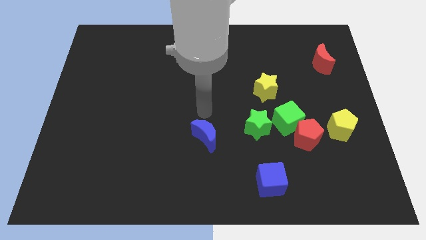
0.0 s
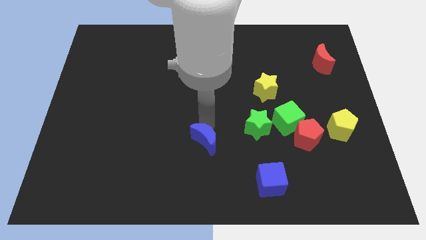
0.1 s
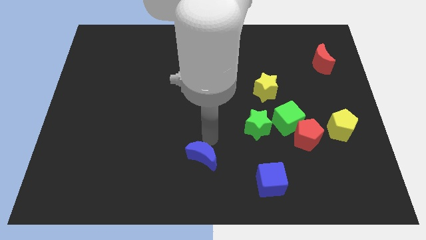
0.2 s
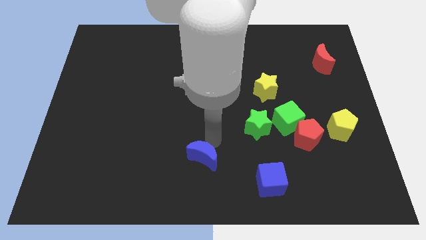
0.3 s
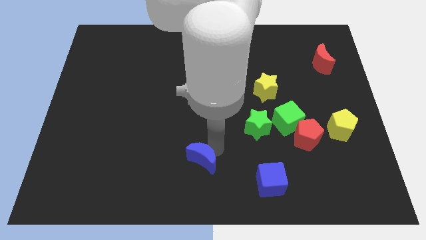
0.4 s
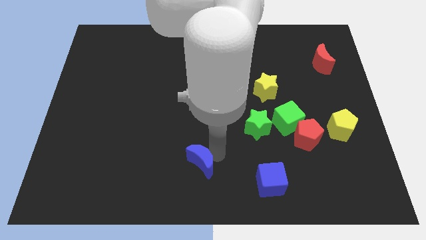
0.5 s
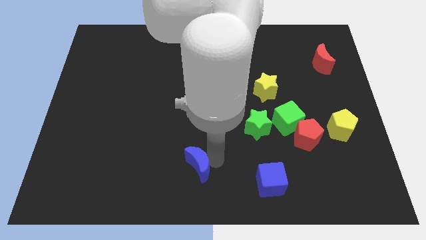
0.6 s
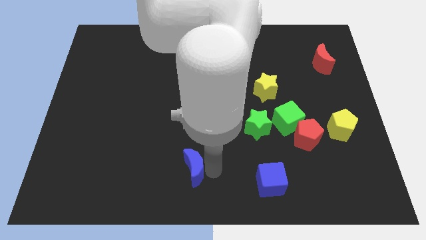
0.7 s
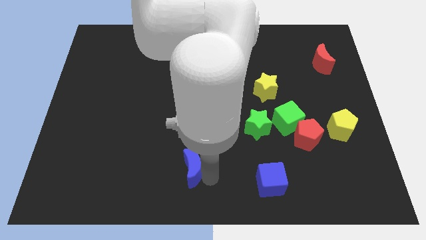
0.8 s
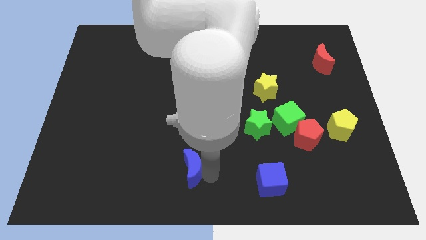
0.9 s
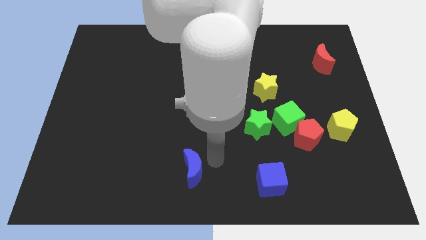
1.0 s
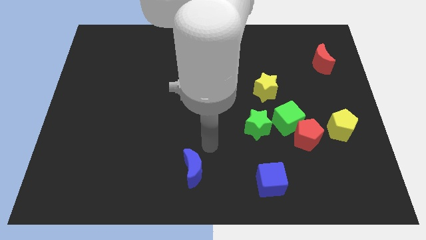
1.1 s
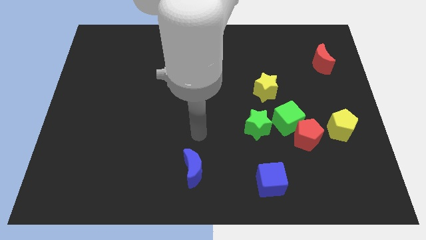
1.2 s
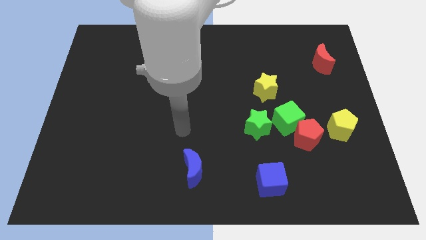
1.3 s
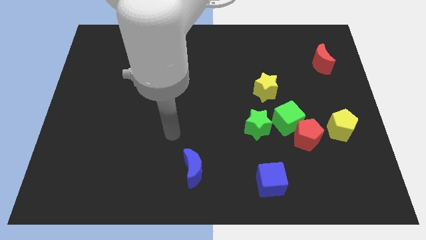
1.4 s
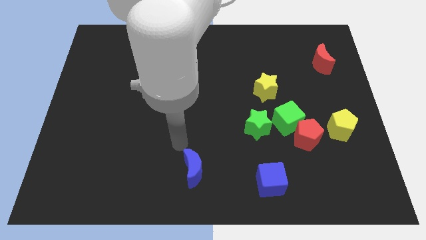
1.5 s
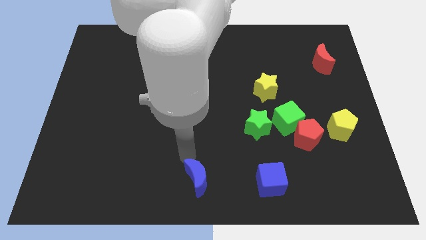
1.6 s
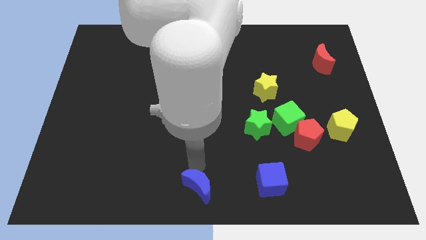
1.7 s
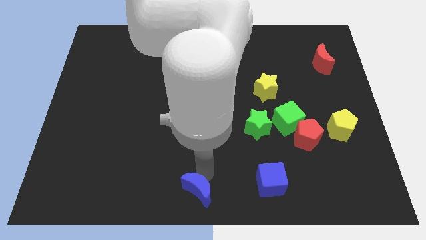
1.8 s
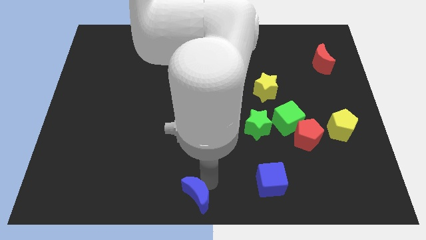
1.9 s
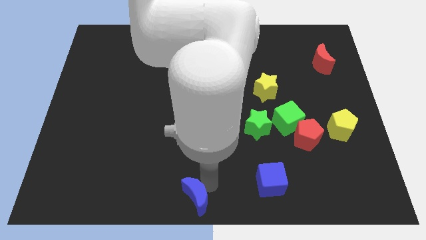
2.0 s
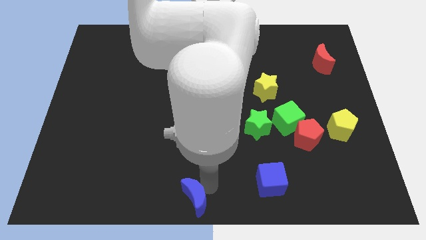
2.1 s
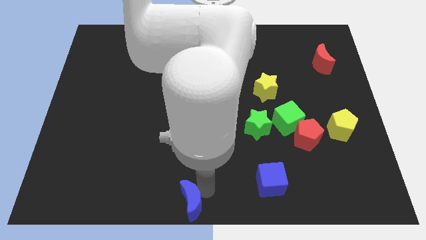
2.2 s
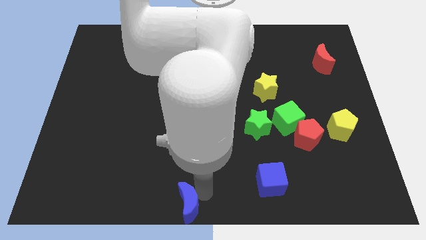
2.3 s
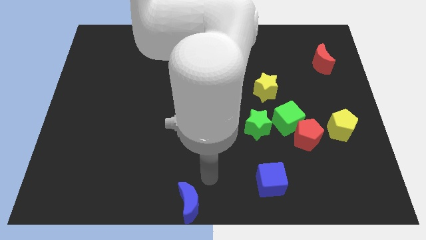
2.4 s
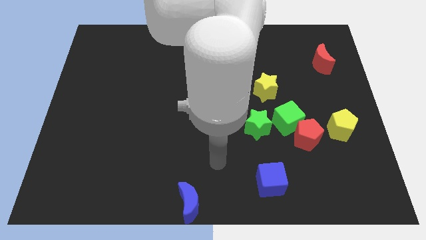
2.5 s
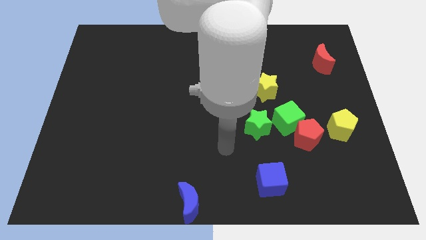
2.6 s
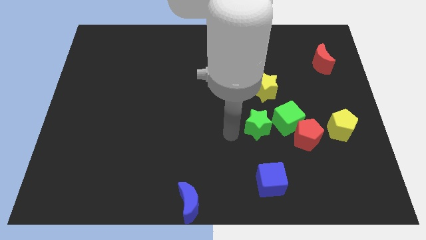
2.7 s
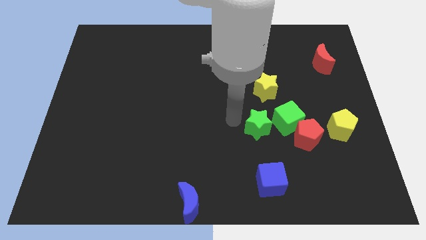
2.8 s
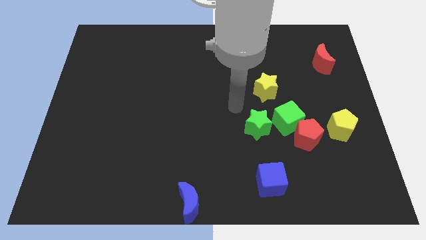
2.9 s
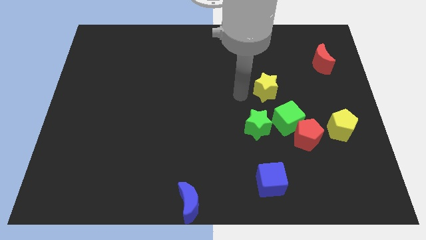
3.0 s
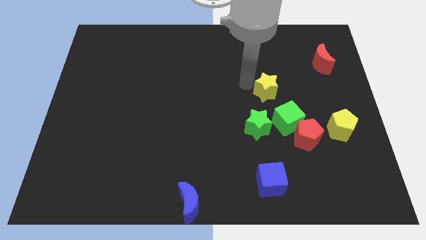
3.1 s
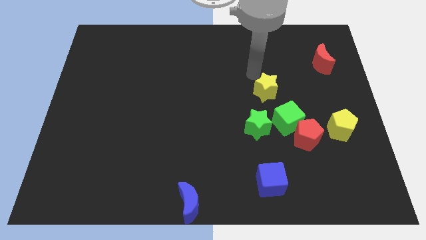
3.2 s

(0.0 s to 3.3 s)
place the blue crescent at the bottom center of the board

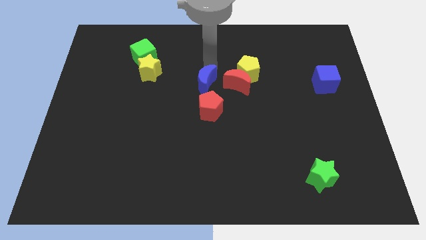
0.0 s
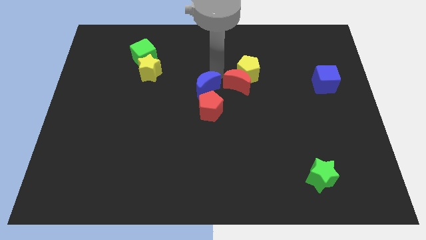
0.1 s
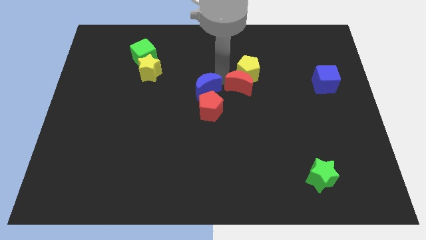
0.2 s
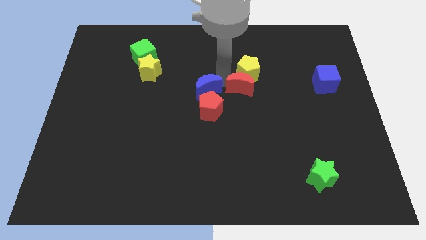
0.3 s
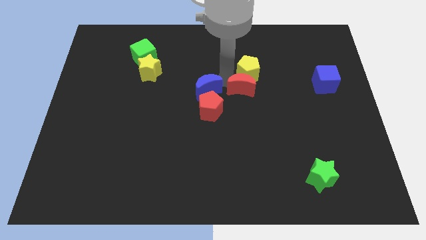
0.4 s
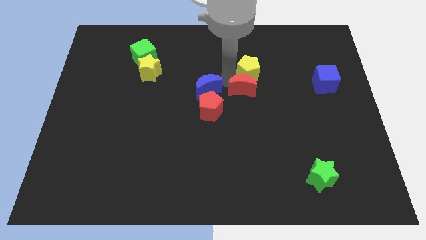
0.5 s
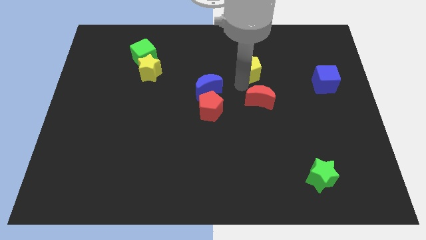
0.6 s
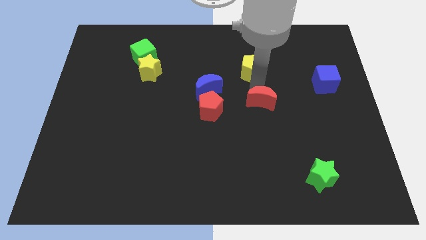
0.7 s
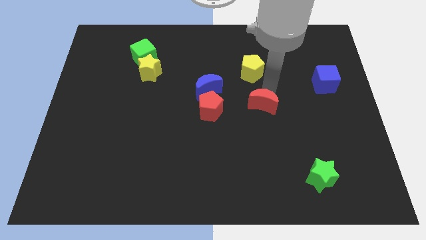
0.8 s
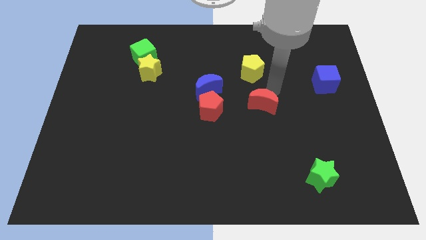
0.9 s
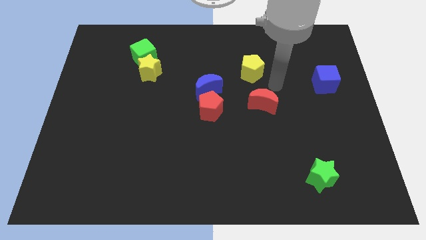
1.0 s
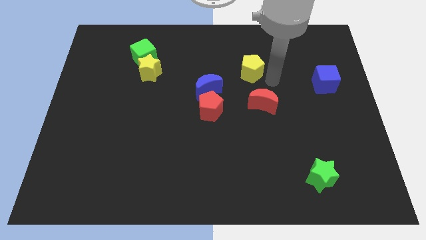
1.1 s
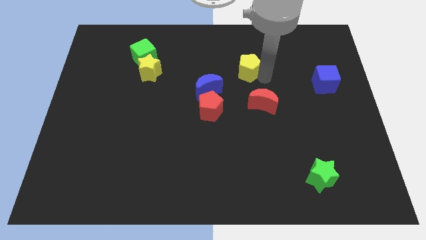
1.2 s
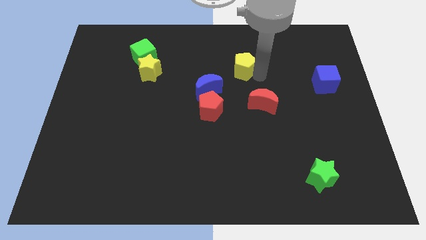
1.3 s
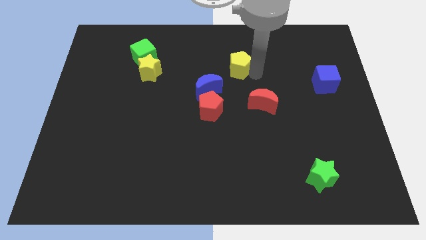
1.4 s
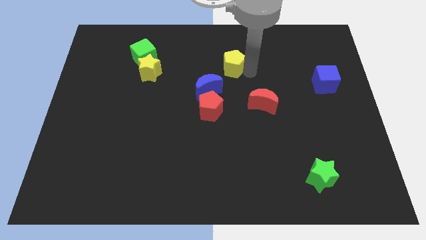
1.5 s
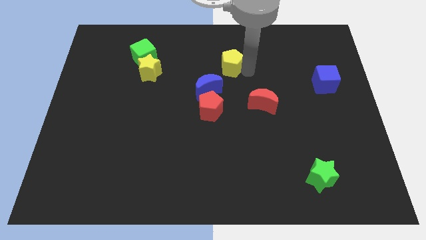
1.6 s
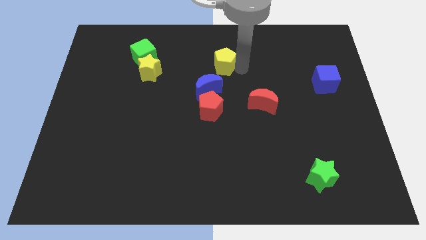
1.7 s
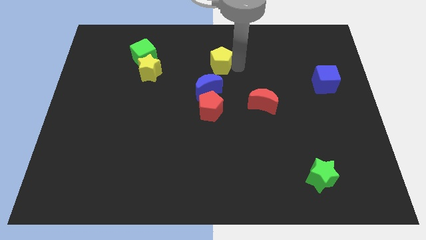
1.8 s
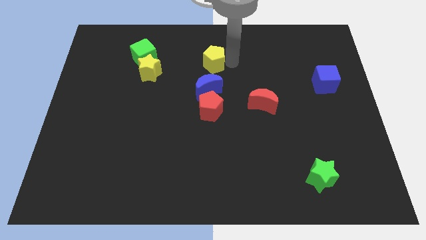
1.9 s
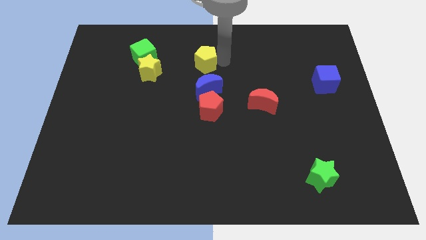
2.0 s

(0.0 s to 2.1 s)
move the yellow pentagon to the top of the blue moon

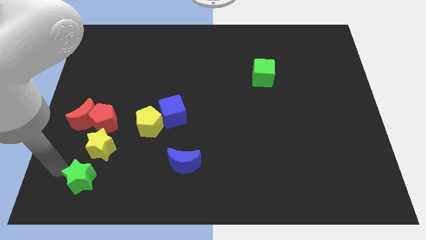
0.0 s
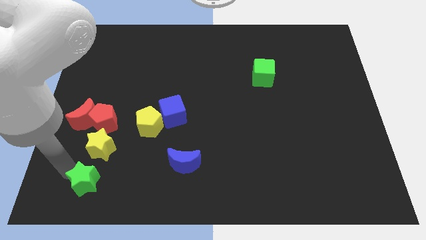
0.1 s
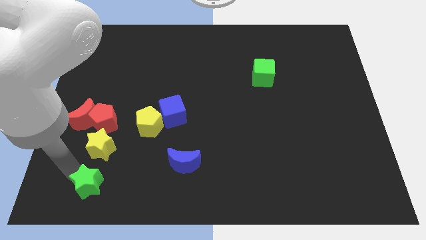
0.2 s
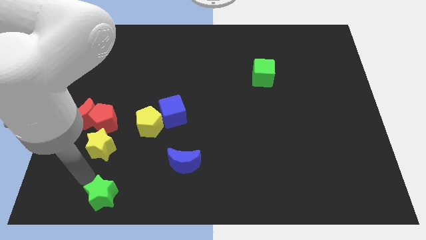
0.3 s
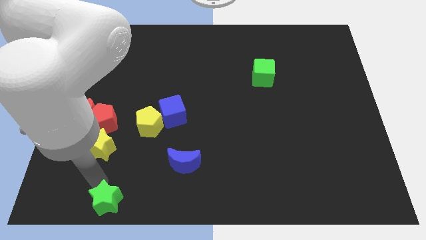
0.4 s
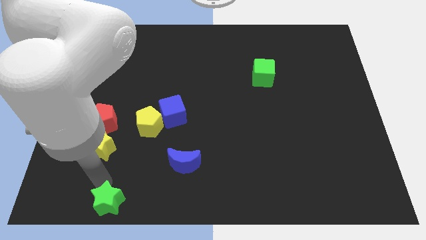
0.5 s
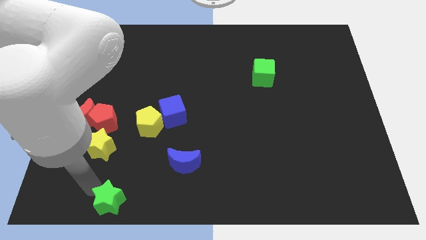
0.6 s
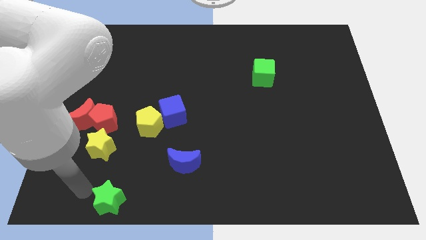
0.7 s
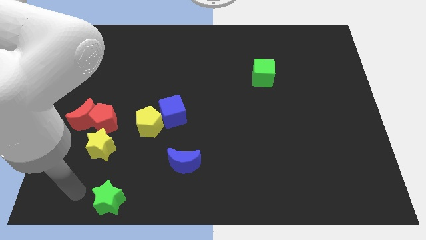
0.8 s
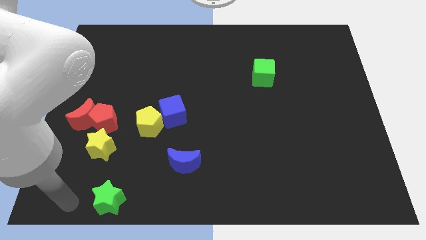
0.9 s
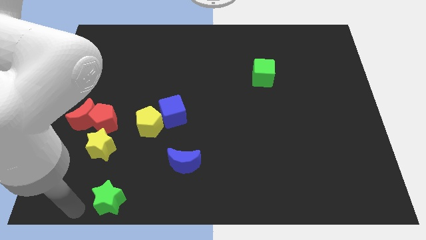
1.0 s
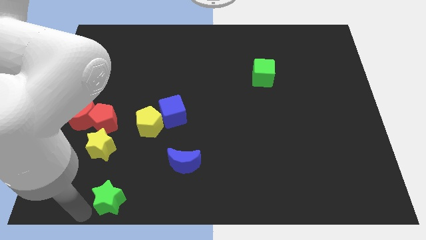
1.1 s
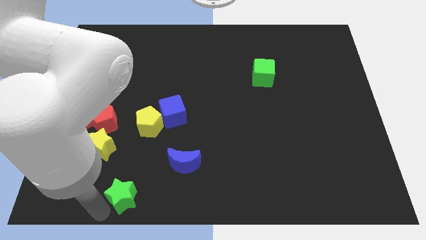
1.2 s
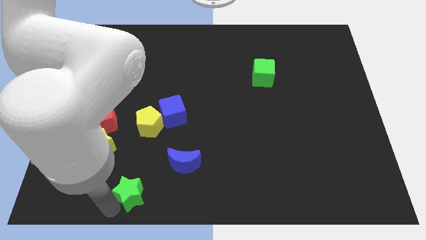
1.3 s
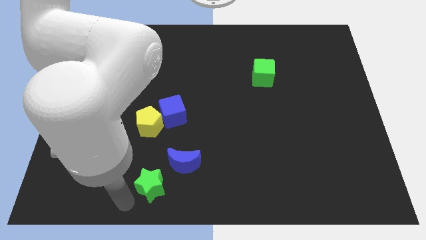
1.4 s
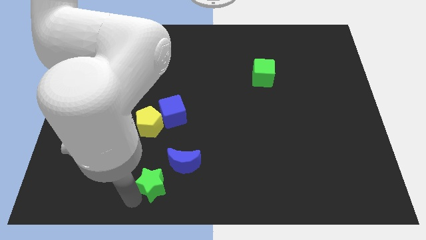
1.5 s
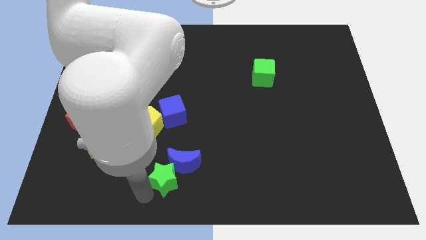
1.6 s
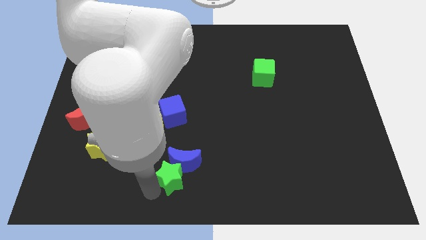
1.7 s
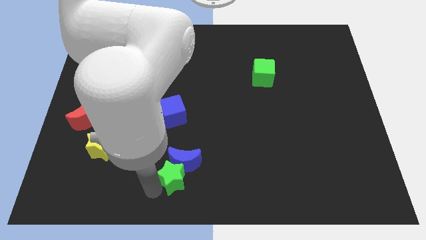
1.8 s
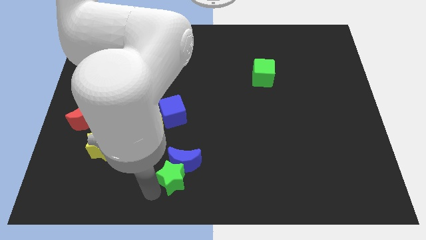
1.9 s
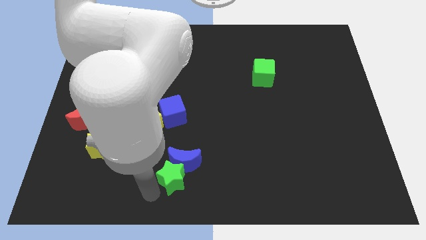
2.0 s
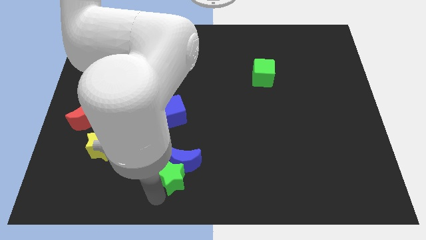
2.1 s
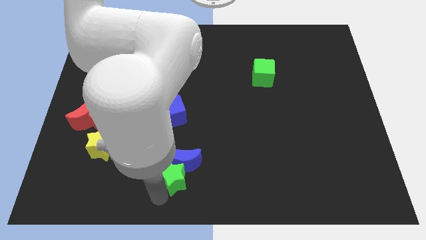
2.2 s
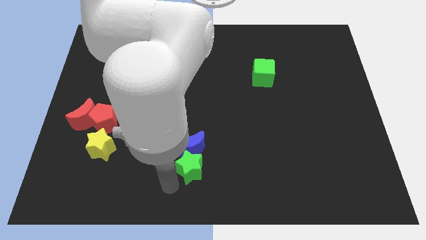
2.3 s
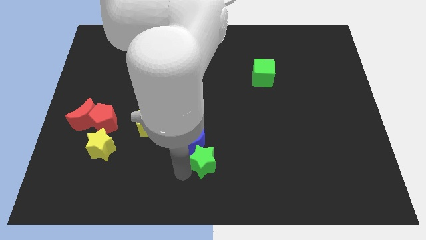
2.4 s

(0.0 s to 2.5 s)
push green star next to blue moon

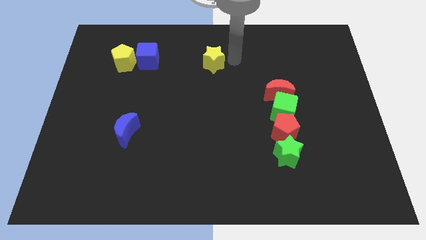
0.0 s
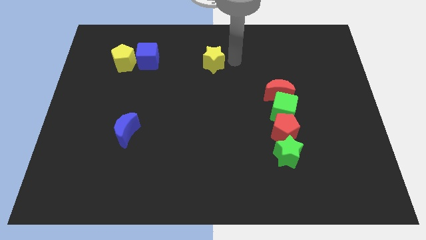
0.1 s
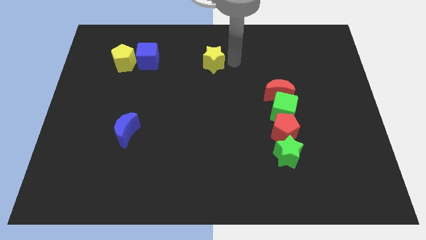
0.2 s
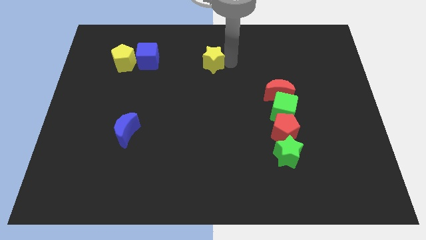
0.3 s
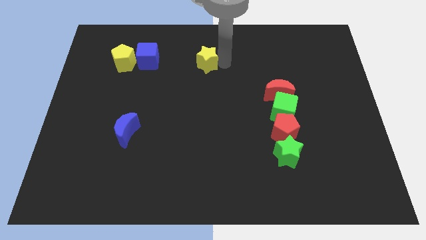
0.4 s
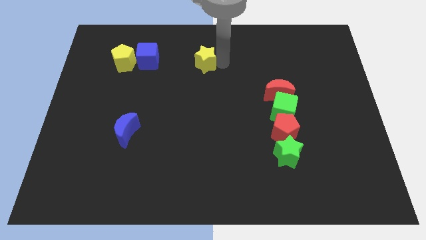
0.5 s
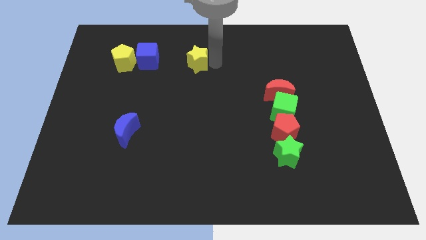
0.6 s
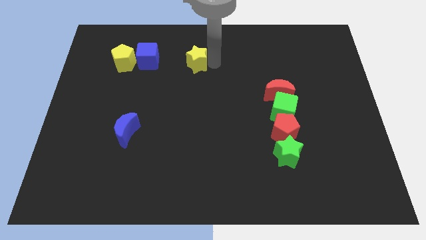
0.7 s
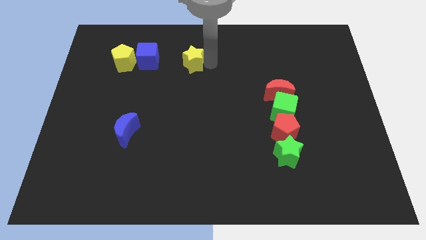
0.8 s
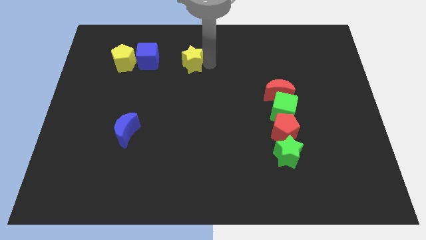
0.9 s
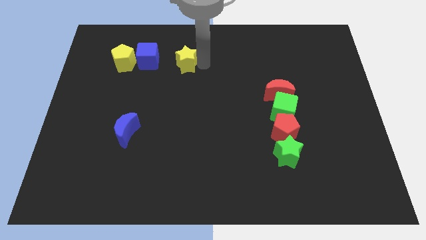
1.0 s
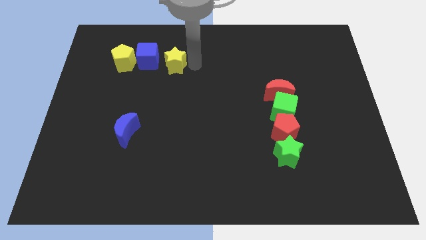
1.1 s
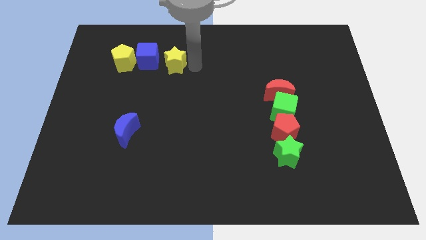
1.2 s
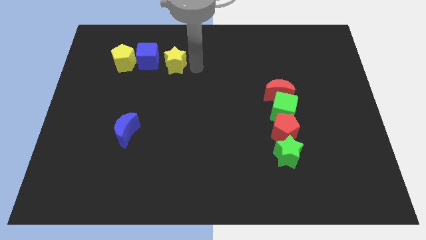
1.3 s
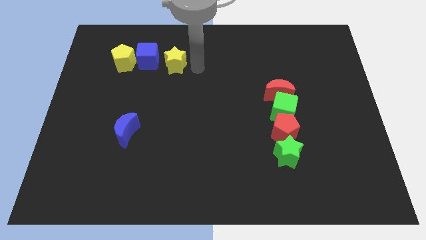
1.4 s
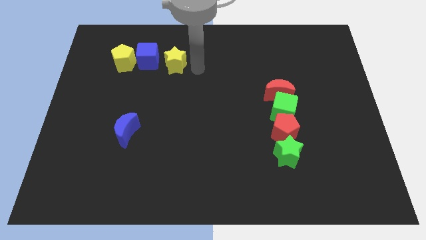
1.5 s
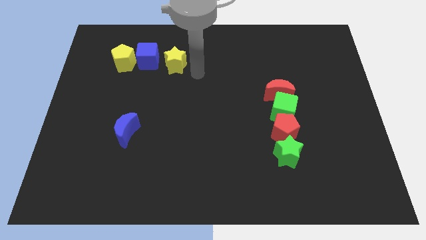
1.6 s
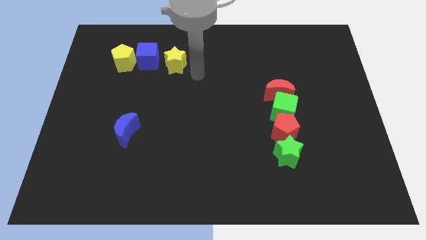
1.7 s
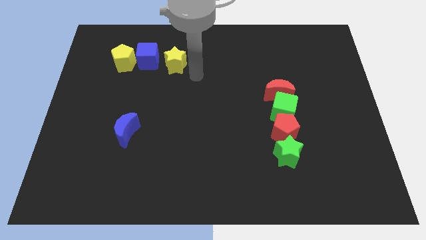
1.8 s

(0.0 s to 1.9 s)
push the yellow star to the right side of the blue cube
